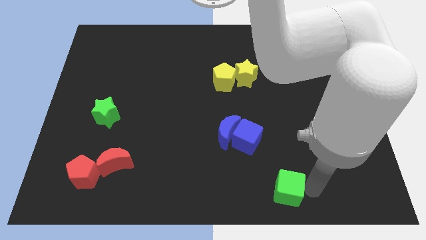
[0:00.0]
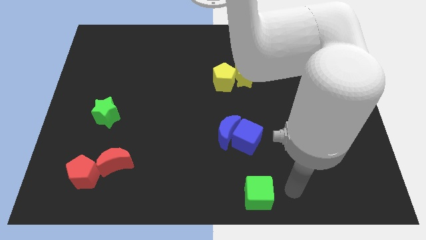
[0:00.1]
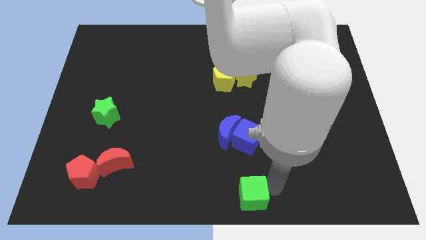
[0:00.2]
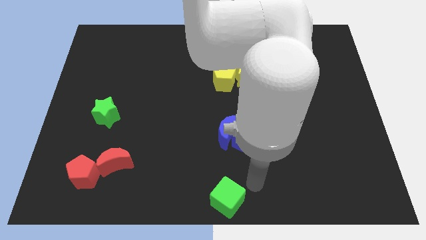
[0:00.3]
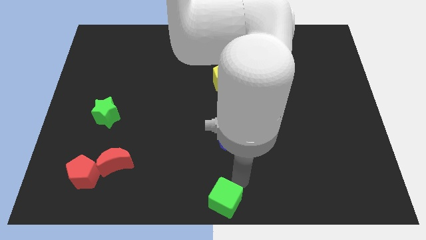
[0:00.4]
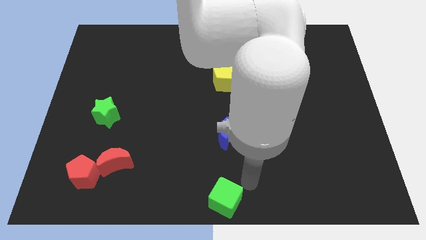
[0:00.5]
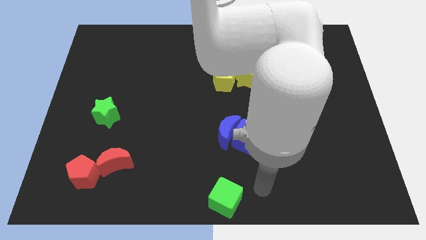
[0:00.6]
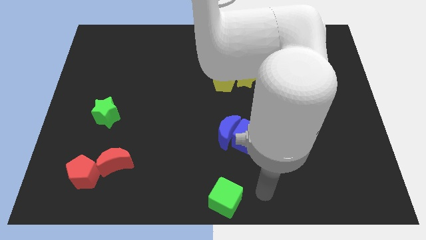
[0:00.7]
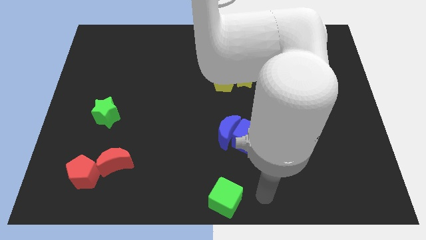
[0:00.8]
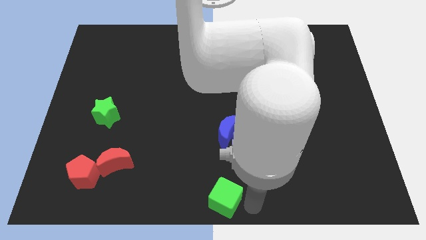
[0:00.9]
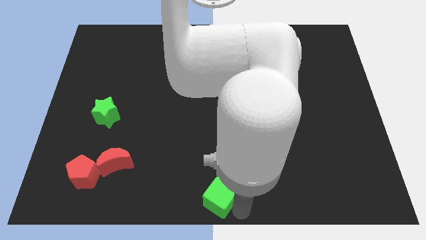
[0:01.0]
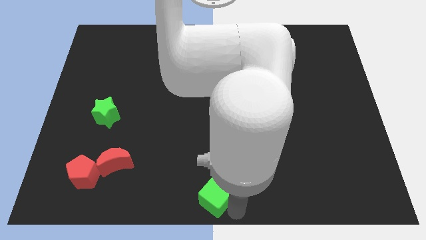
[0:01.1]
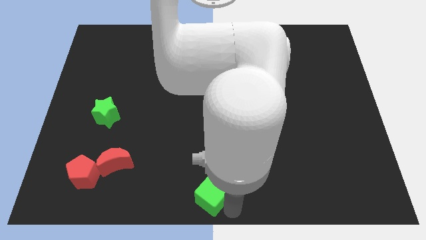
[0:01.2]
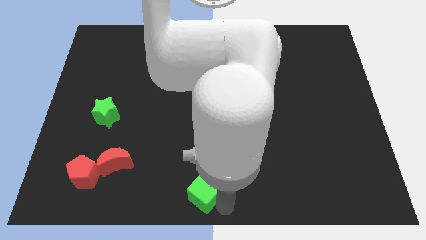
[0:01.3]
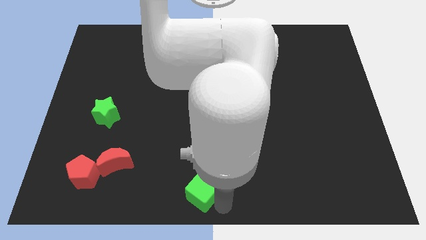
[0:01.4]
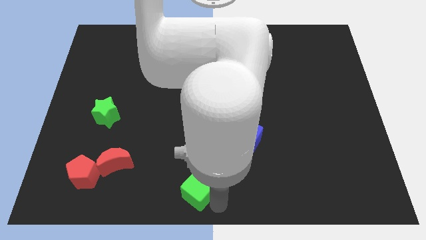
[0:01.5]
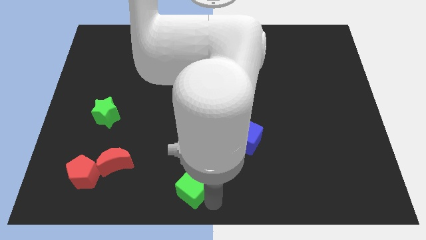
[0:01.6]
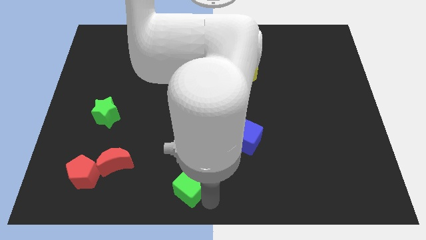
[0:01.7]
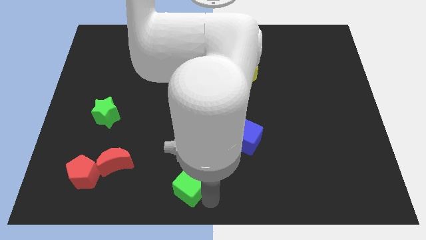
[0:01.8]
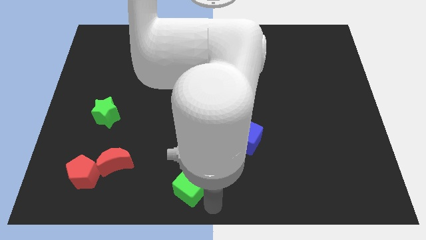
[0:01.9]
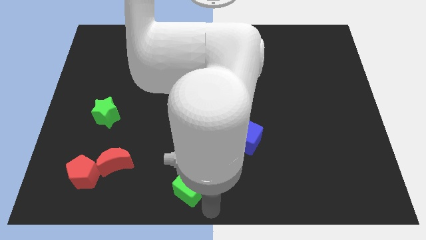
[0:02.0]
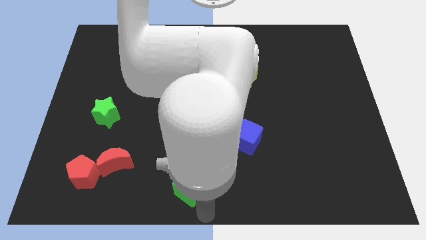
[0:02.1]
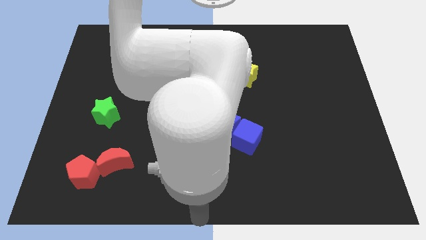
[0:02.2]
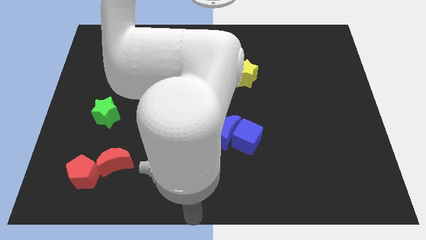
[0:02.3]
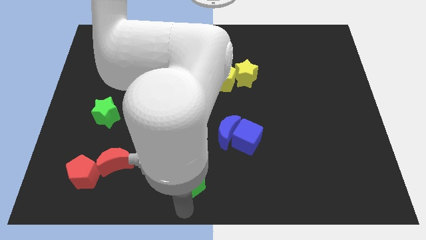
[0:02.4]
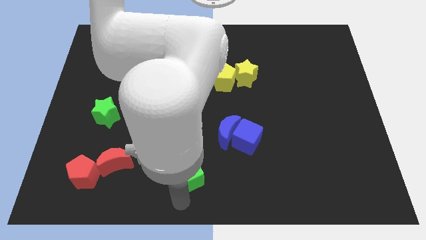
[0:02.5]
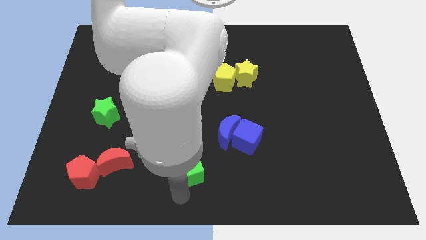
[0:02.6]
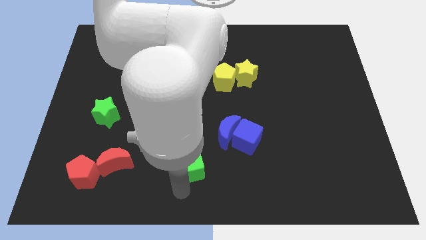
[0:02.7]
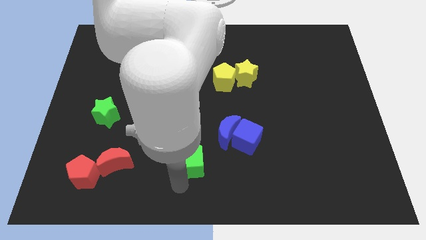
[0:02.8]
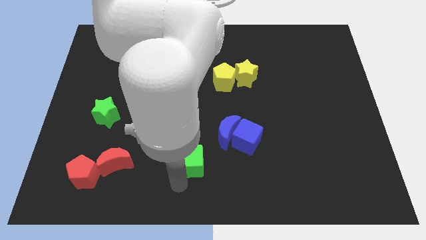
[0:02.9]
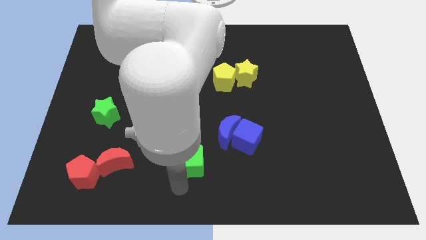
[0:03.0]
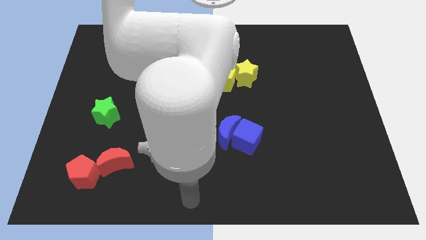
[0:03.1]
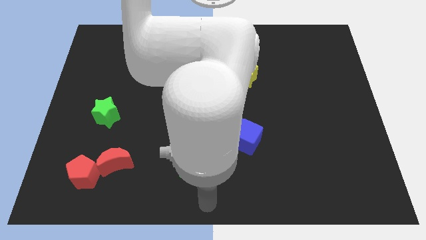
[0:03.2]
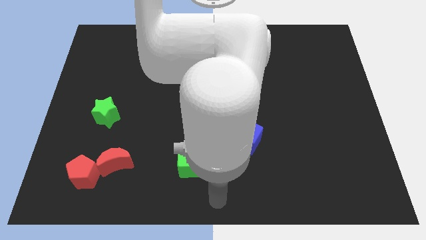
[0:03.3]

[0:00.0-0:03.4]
place the green cube right to the red moon

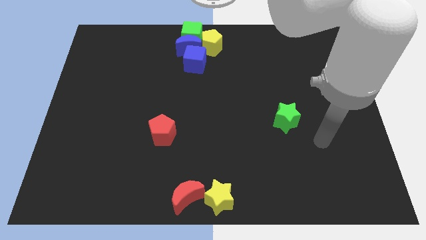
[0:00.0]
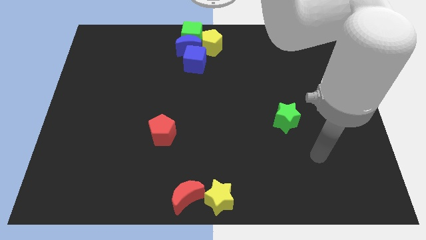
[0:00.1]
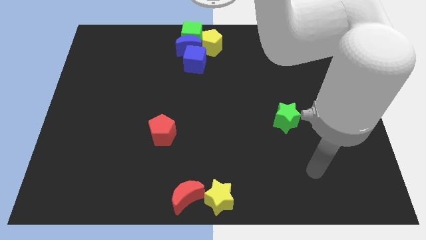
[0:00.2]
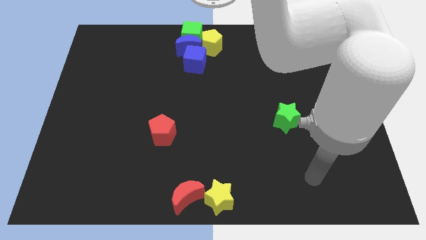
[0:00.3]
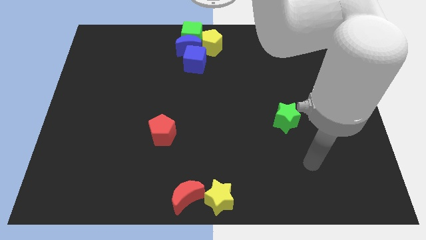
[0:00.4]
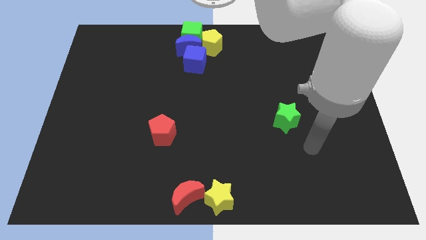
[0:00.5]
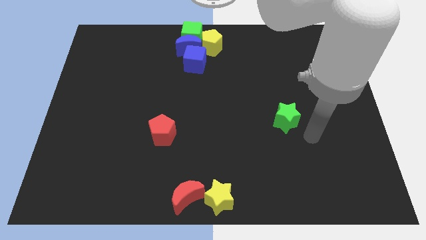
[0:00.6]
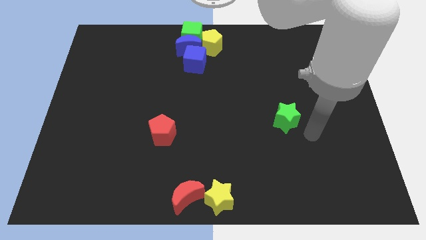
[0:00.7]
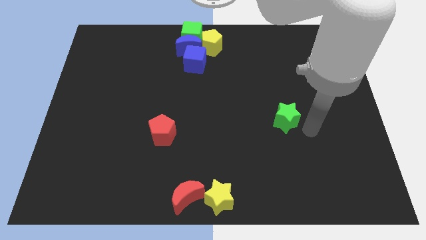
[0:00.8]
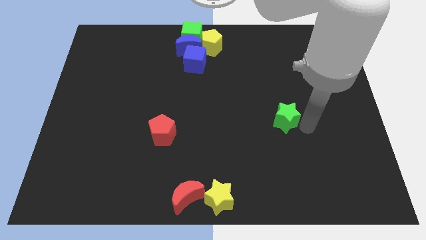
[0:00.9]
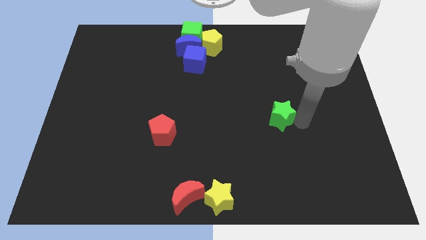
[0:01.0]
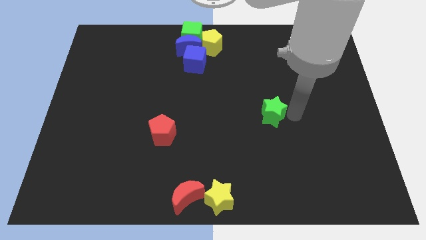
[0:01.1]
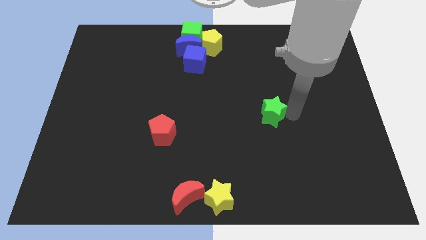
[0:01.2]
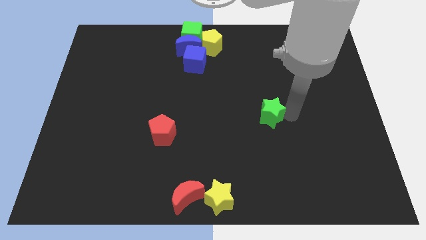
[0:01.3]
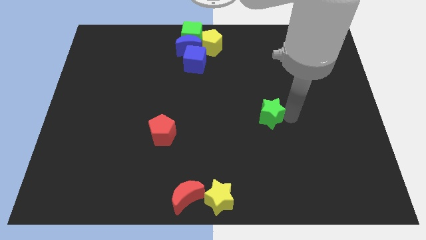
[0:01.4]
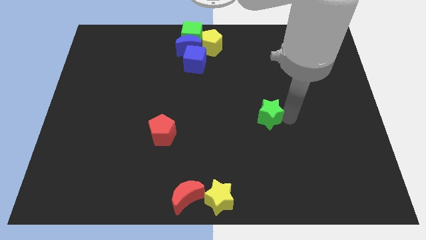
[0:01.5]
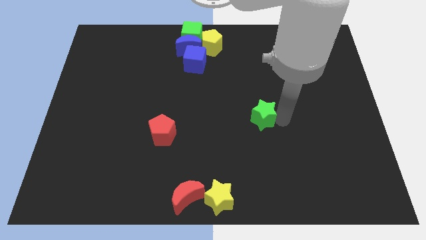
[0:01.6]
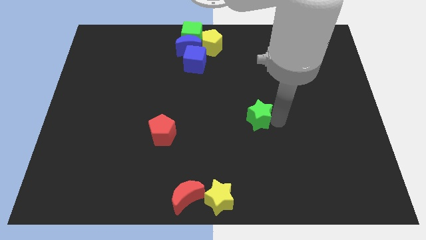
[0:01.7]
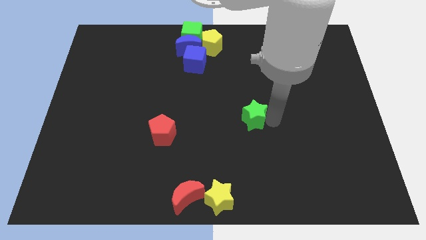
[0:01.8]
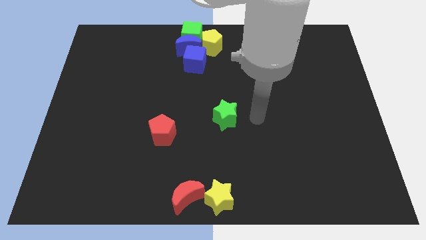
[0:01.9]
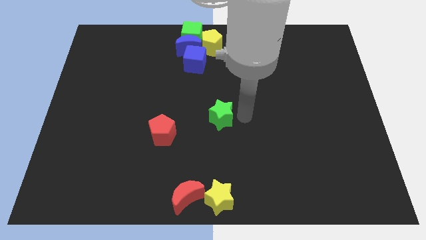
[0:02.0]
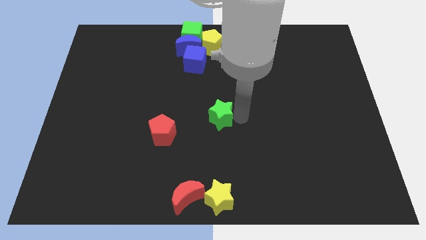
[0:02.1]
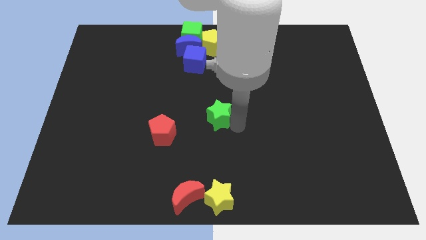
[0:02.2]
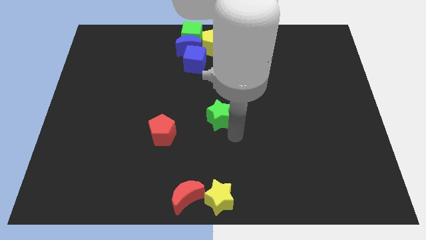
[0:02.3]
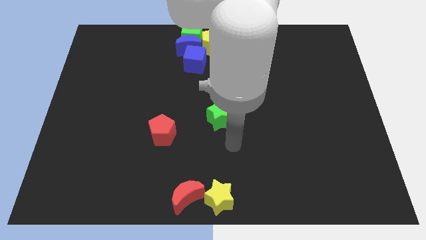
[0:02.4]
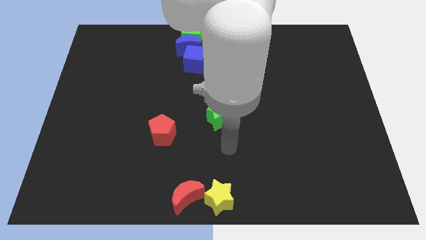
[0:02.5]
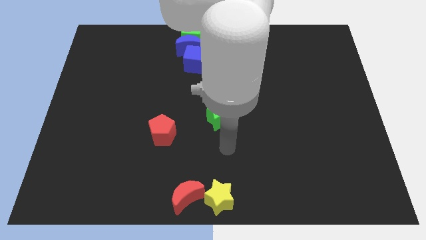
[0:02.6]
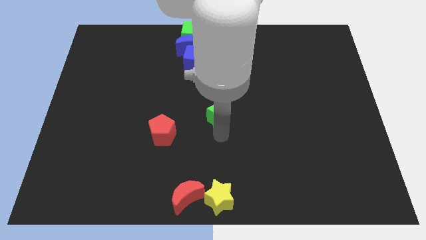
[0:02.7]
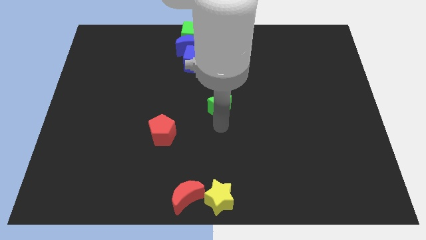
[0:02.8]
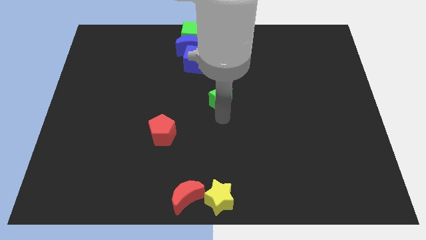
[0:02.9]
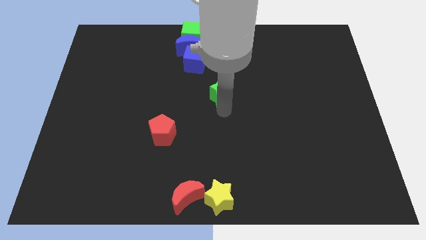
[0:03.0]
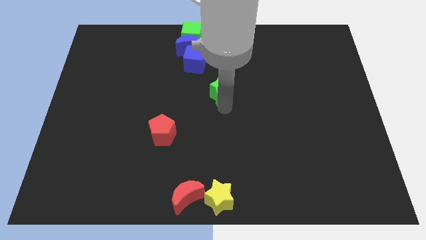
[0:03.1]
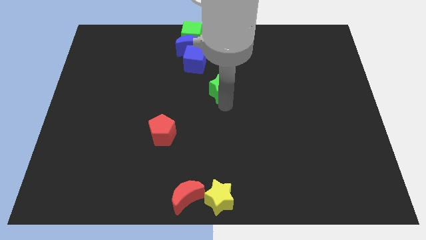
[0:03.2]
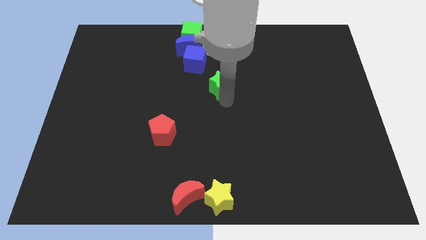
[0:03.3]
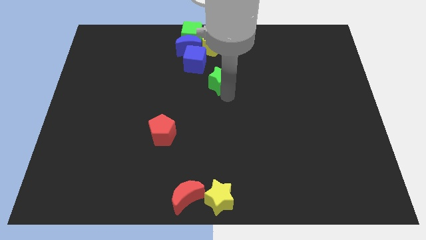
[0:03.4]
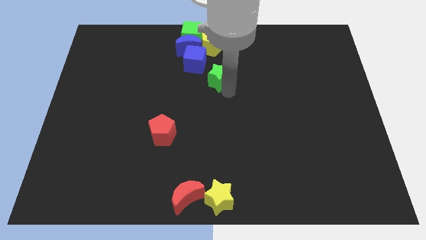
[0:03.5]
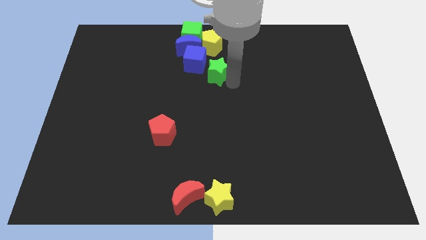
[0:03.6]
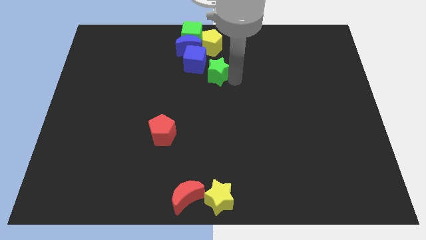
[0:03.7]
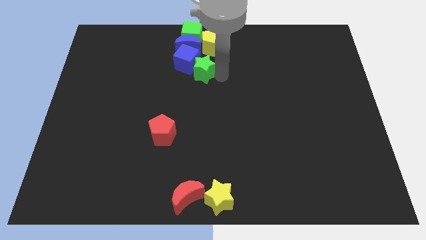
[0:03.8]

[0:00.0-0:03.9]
move the green star into the right side of the blue cube

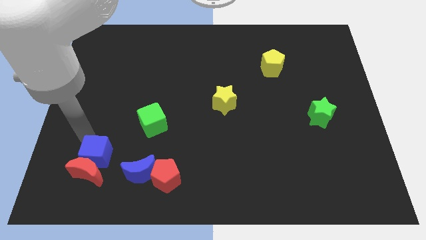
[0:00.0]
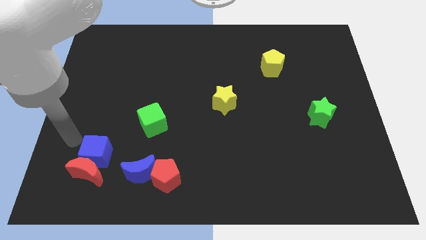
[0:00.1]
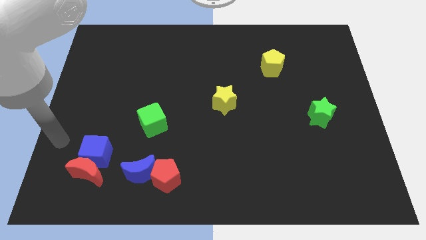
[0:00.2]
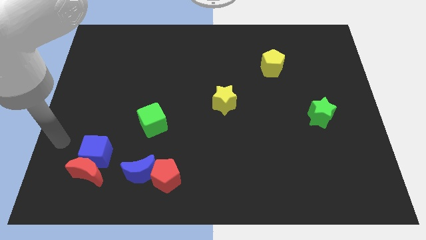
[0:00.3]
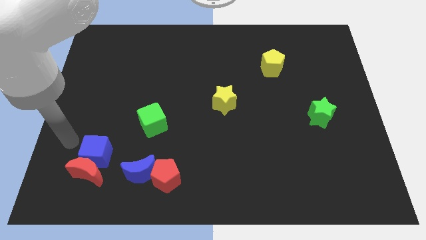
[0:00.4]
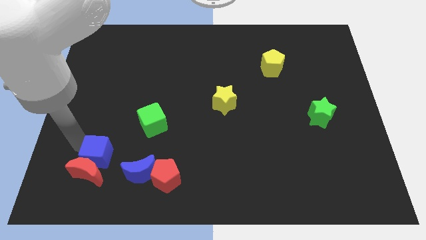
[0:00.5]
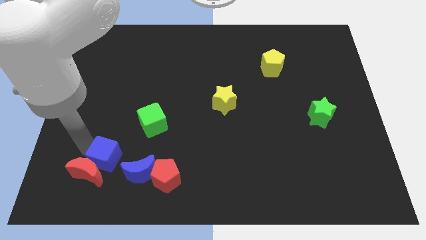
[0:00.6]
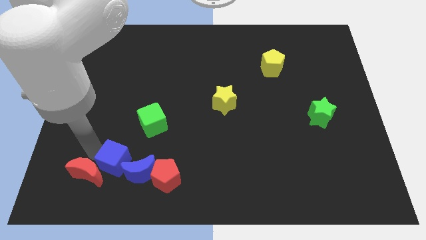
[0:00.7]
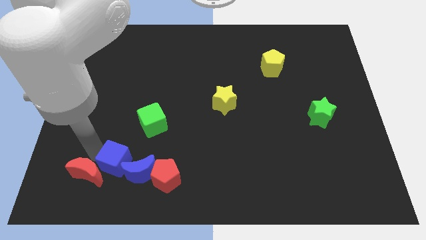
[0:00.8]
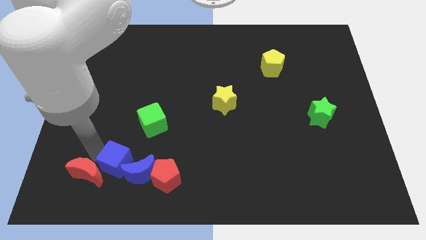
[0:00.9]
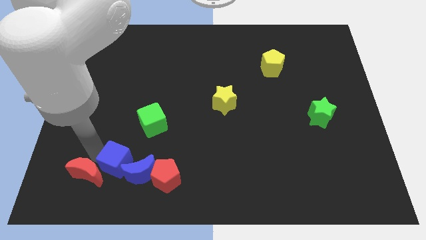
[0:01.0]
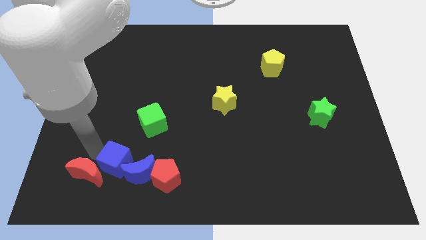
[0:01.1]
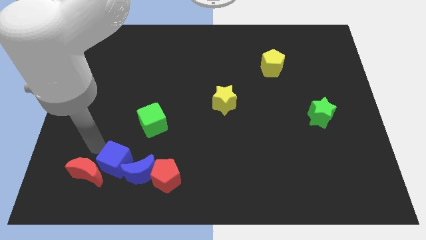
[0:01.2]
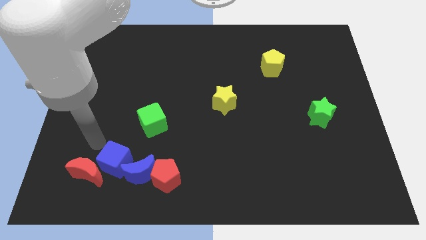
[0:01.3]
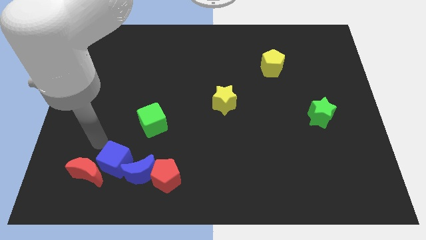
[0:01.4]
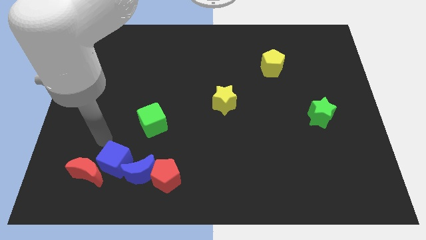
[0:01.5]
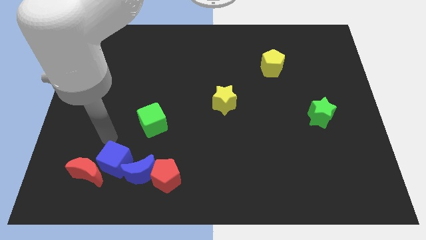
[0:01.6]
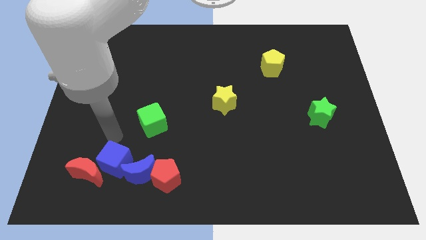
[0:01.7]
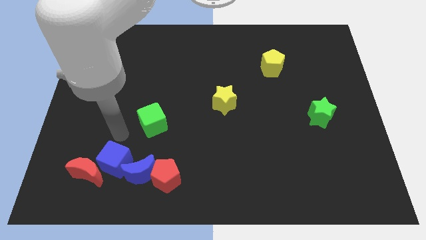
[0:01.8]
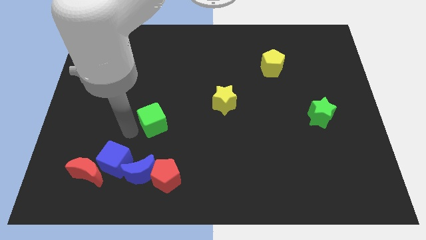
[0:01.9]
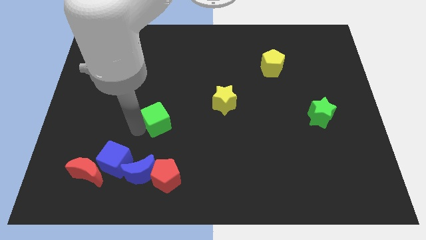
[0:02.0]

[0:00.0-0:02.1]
place the blue cube to the top left of the blue moon
